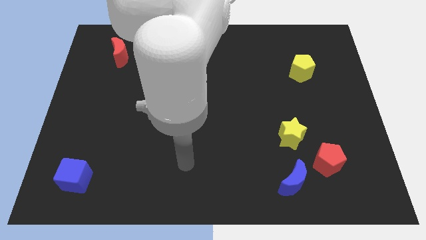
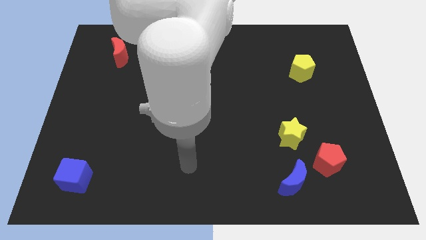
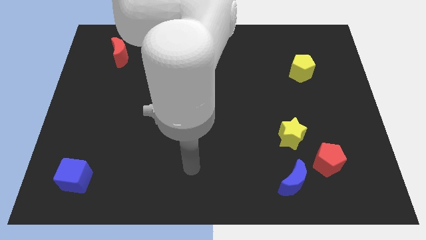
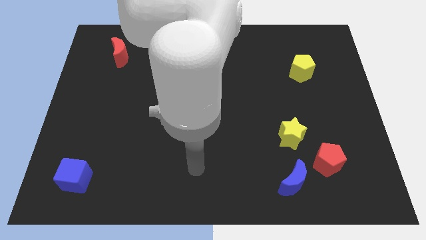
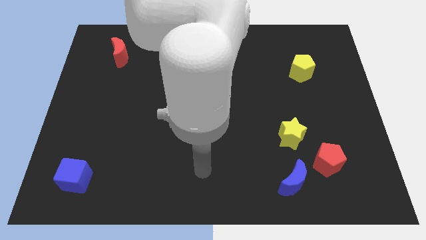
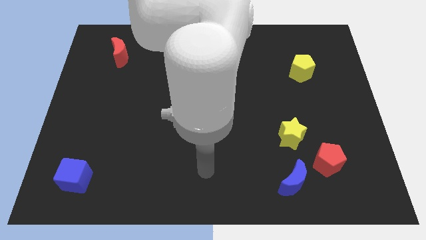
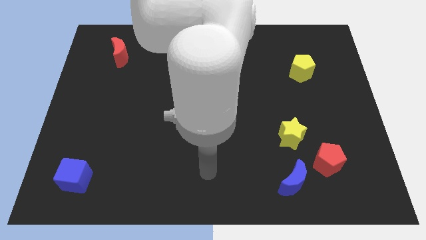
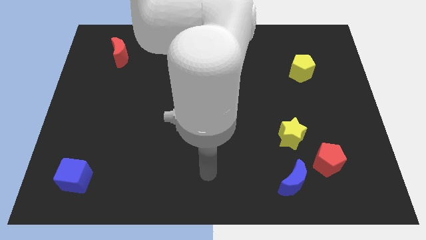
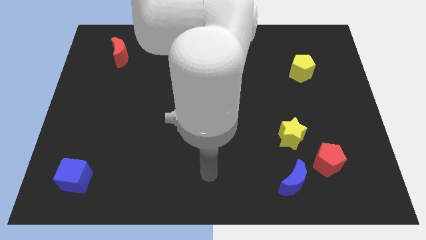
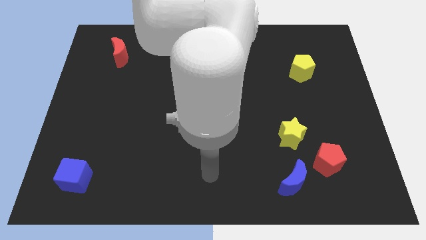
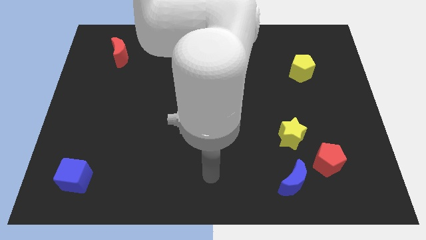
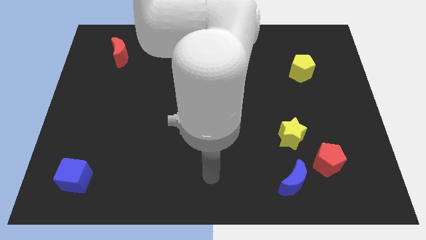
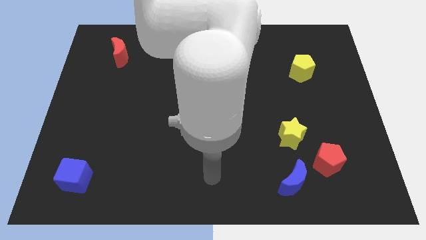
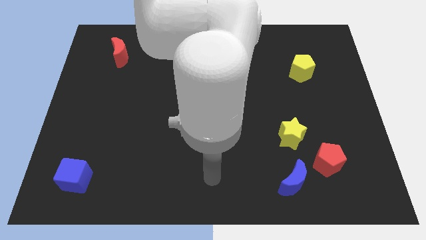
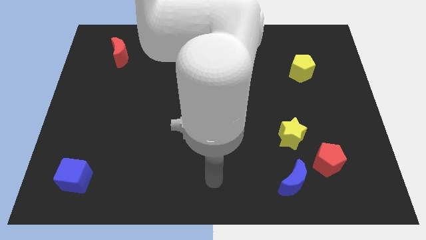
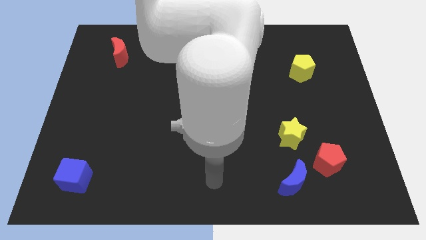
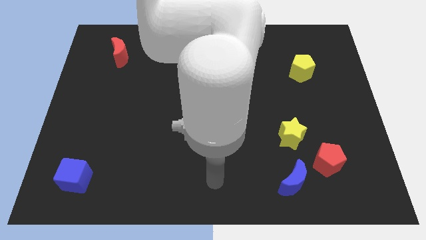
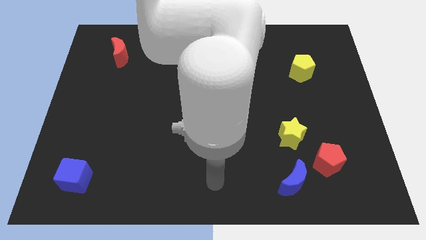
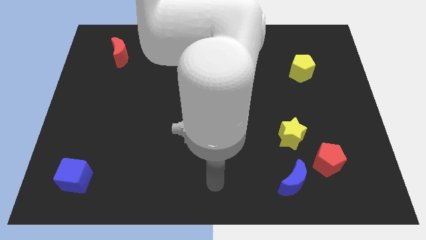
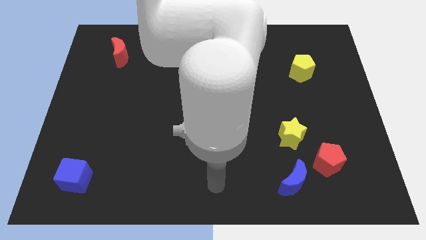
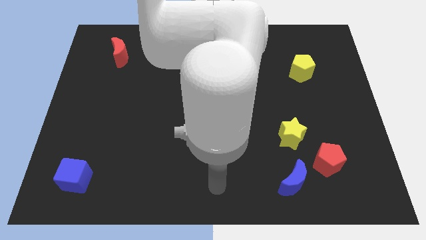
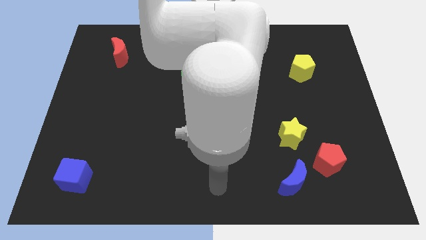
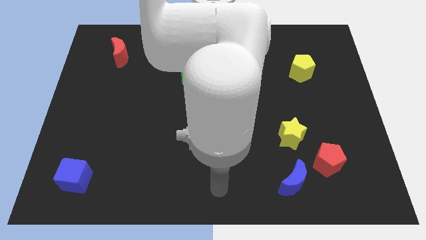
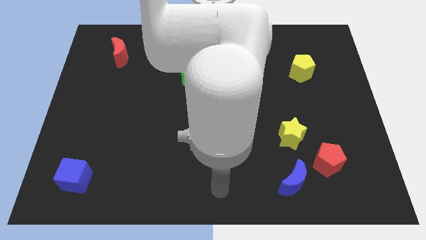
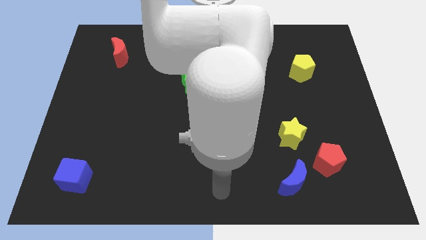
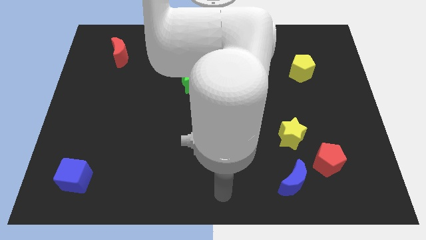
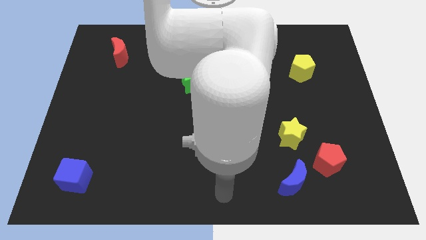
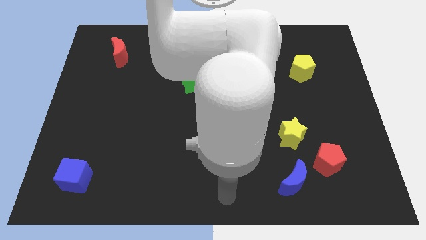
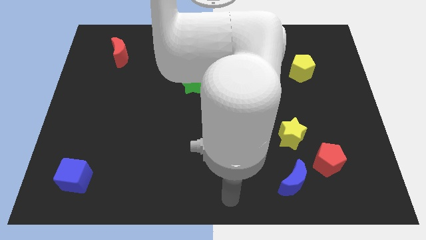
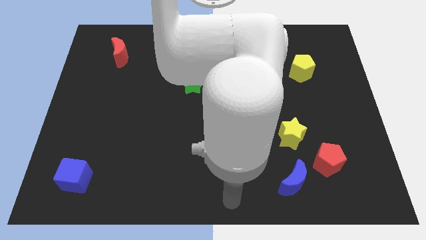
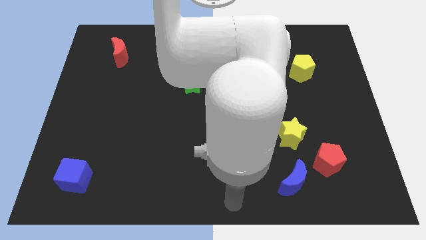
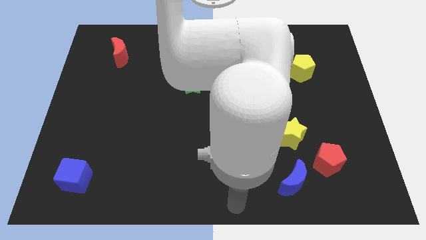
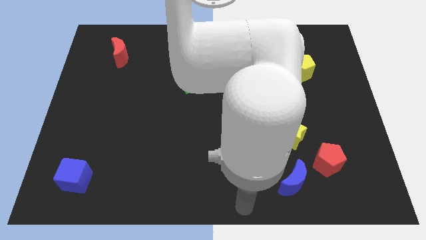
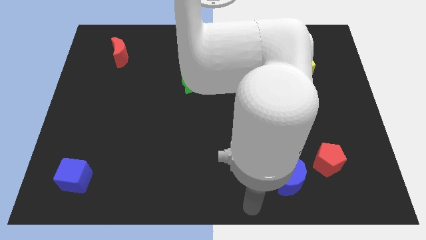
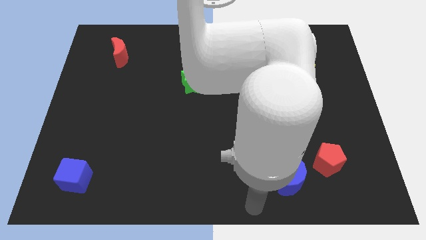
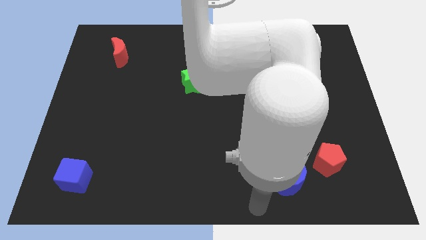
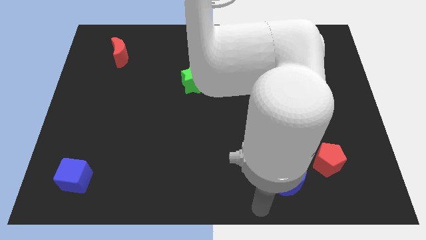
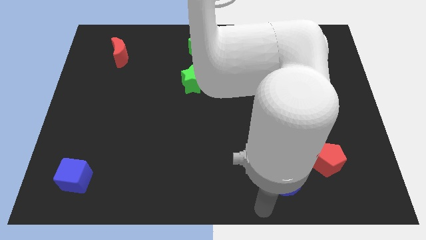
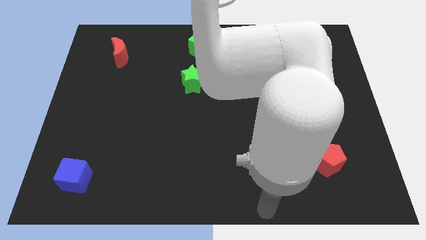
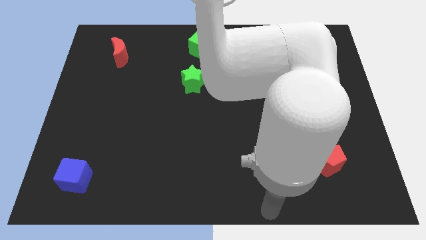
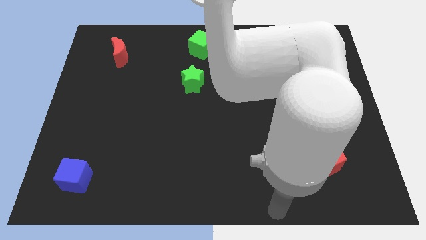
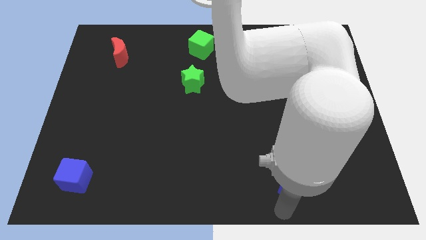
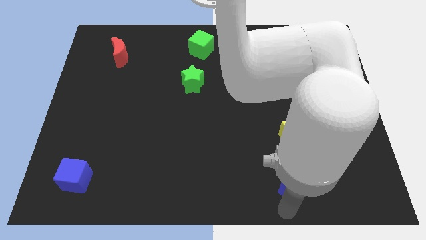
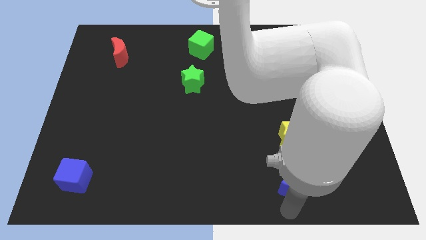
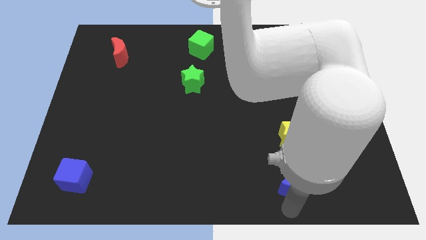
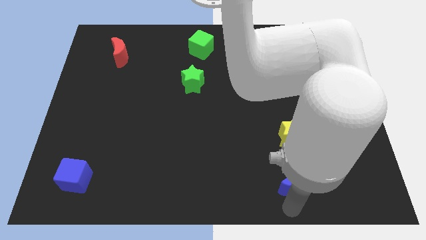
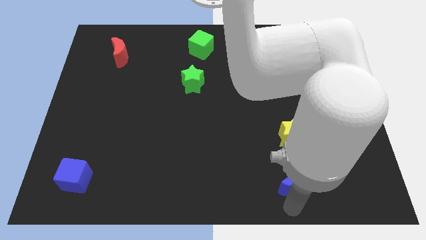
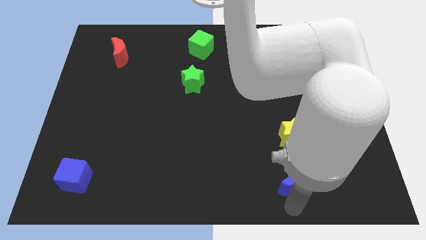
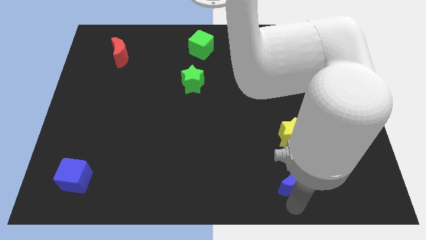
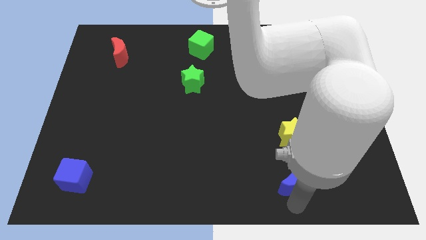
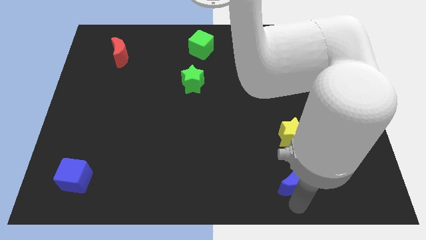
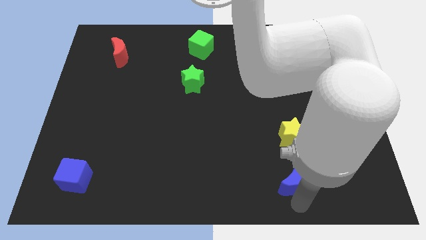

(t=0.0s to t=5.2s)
place the arm down to the blue moon

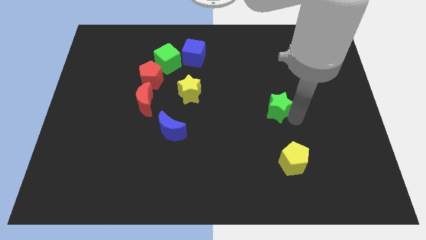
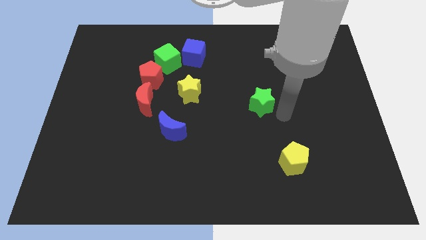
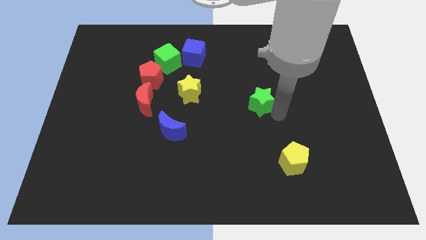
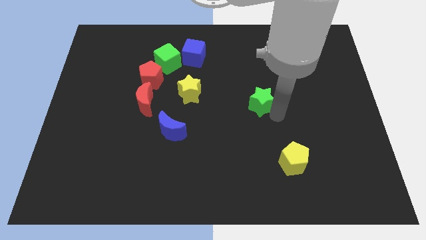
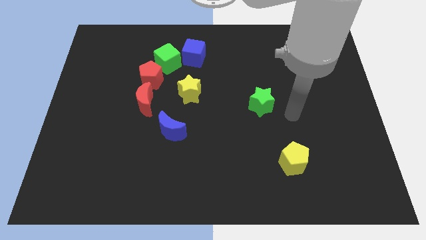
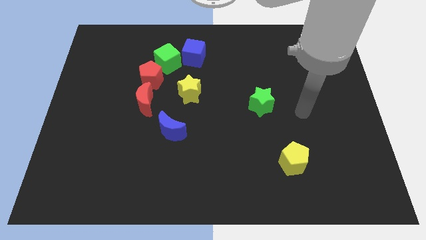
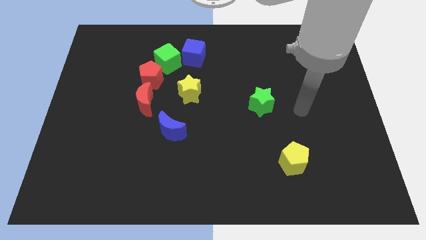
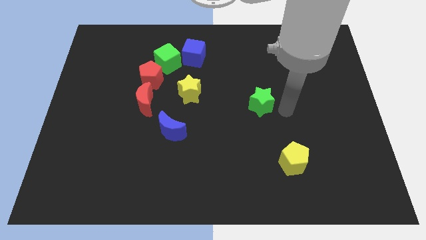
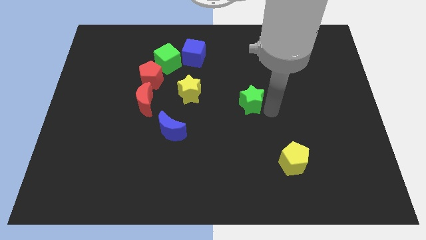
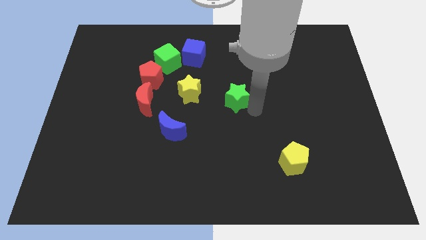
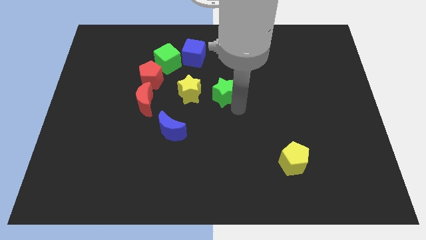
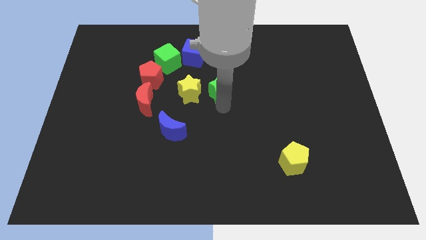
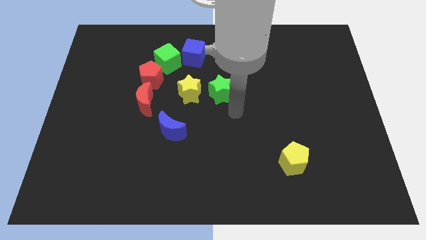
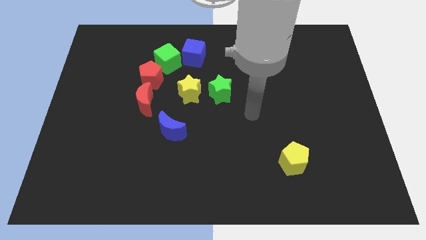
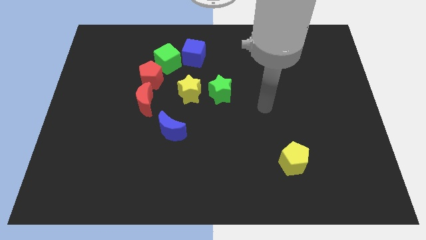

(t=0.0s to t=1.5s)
place the green star to the right side of the yellow star

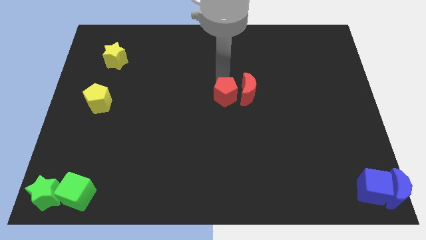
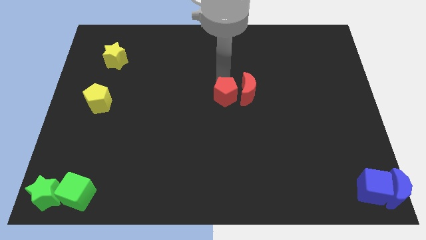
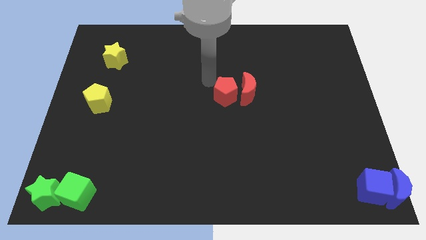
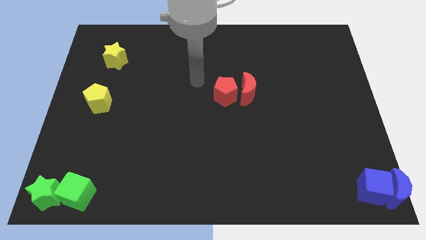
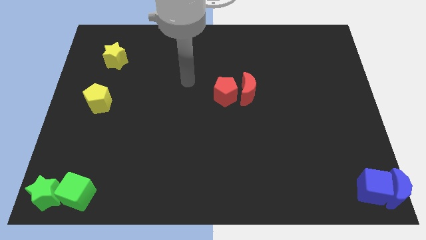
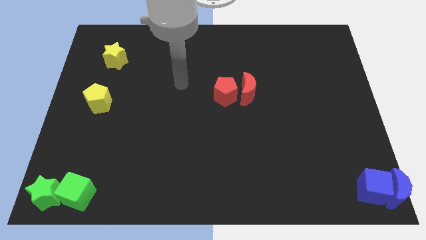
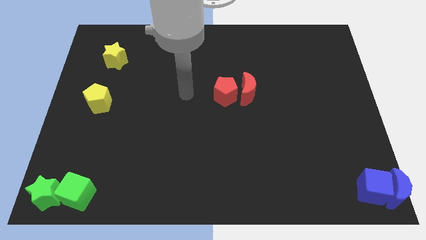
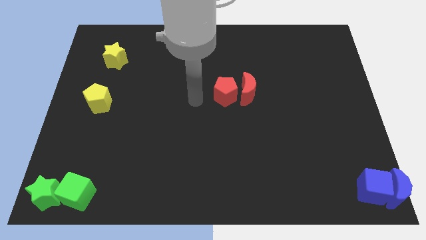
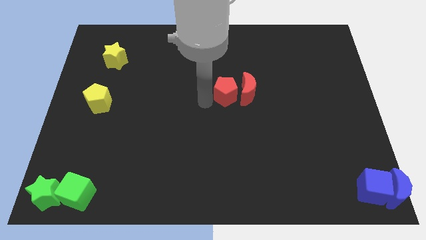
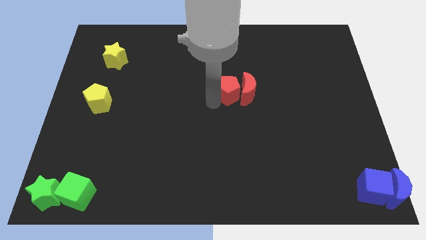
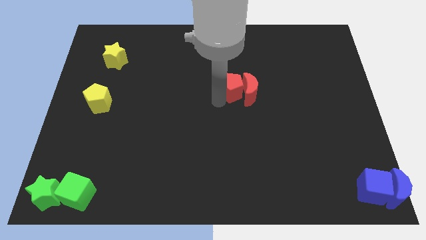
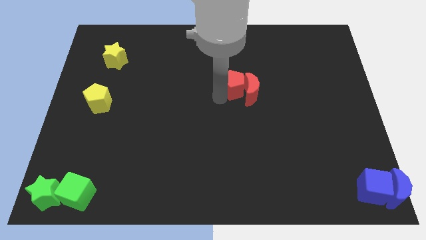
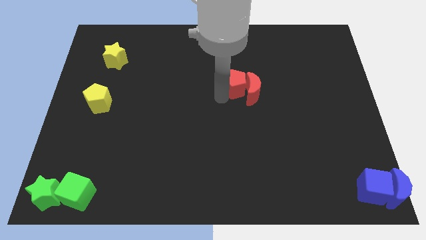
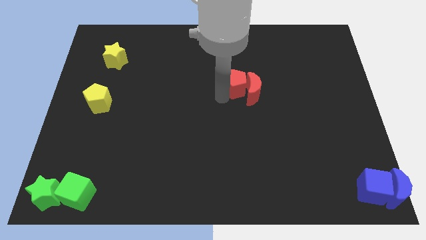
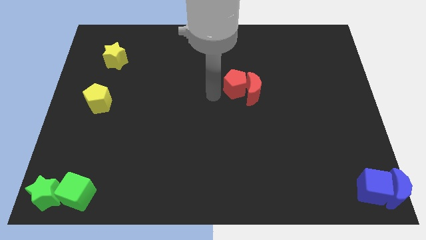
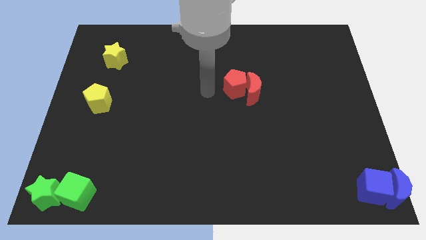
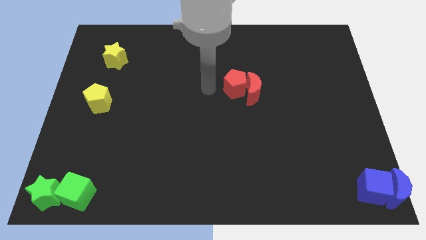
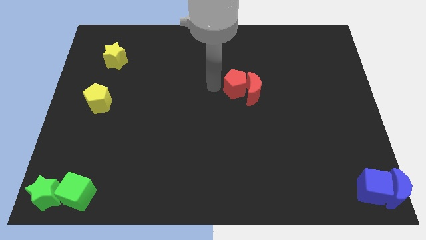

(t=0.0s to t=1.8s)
push the red pentagon into the red moon

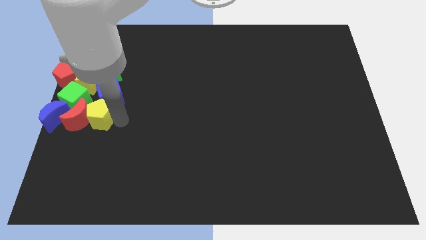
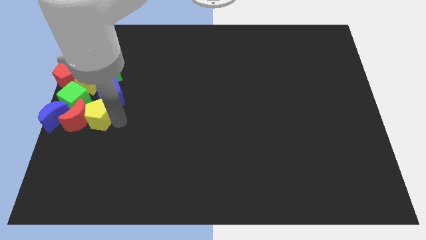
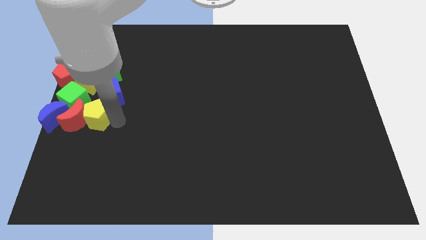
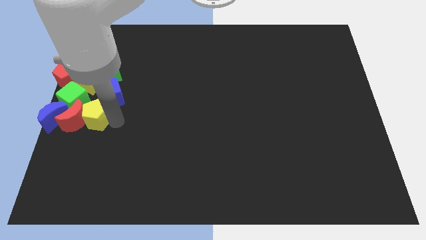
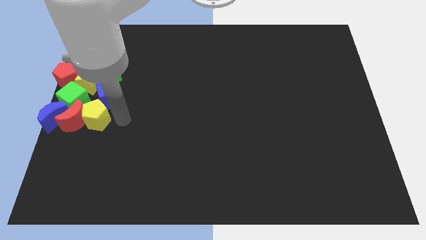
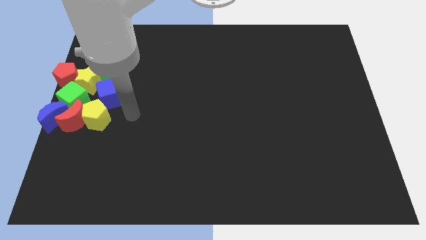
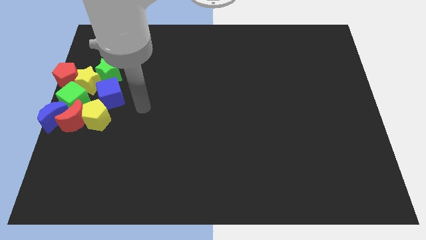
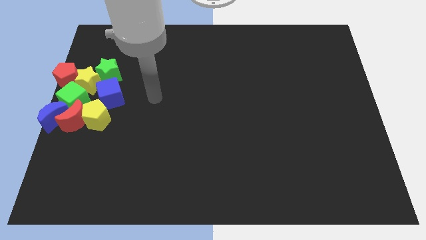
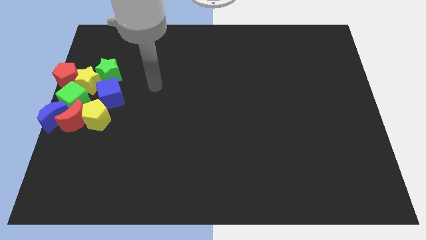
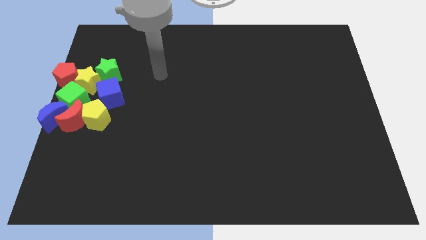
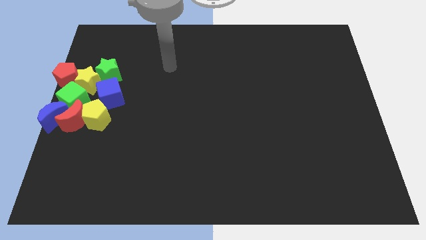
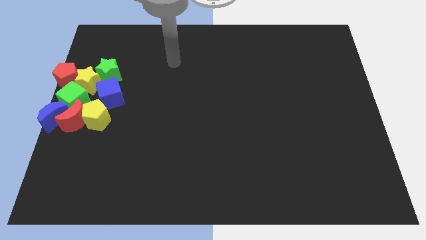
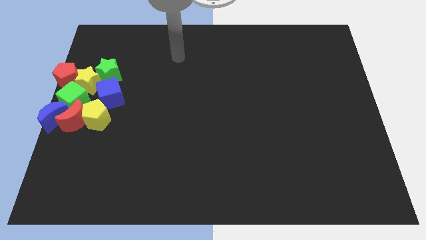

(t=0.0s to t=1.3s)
move the arm to the top center of baord
